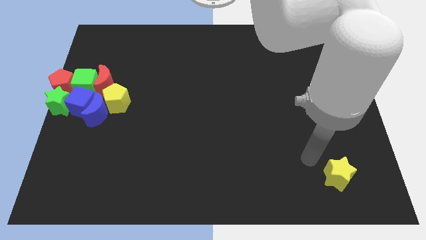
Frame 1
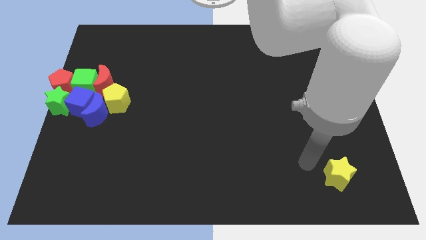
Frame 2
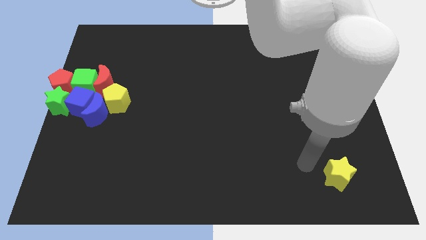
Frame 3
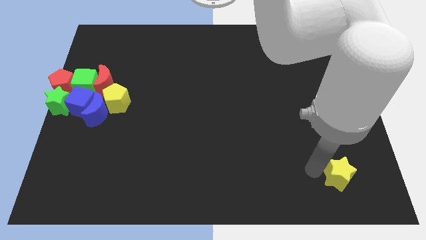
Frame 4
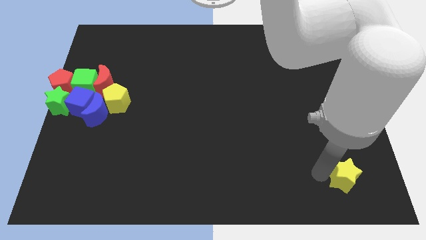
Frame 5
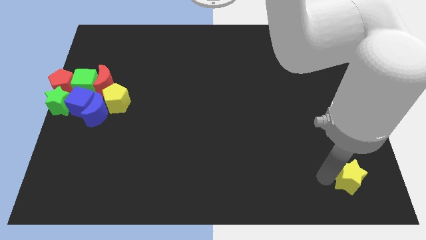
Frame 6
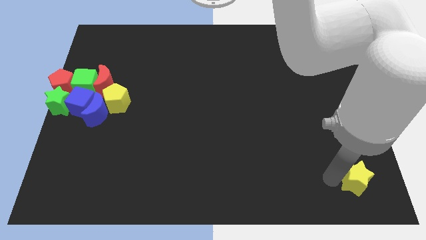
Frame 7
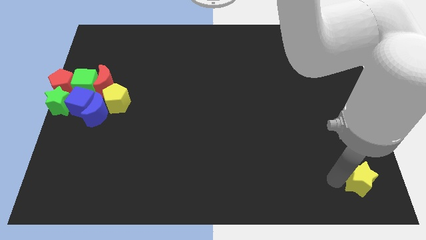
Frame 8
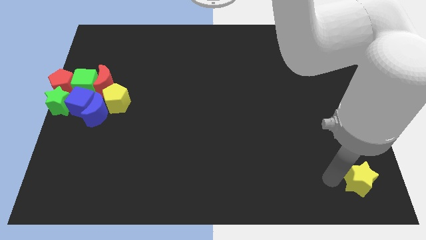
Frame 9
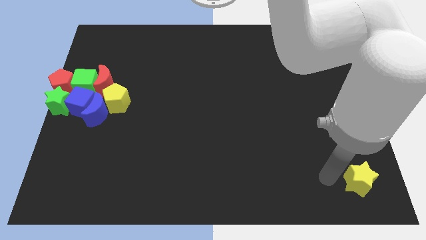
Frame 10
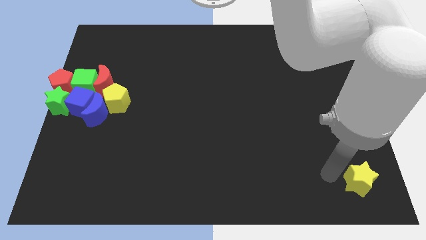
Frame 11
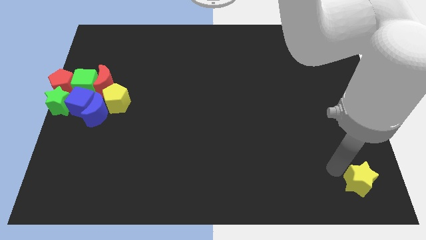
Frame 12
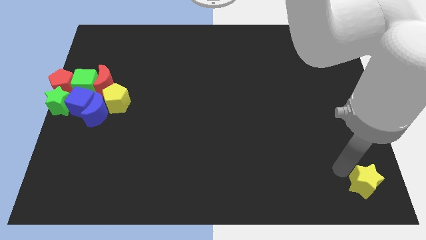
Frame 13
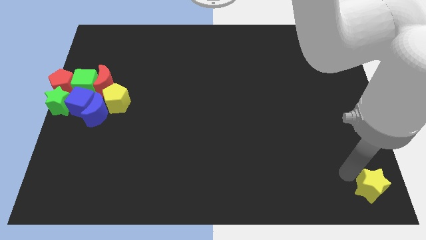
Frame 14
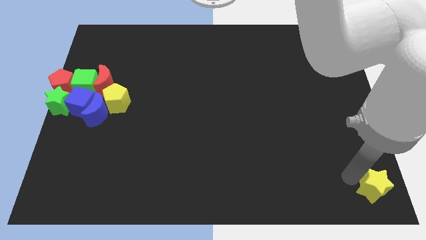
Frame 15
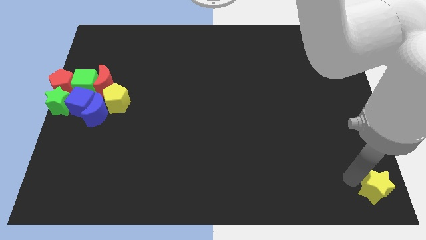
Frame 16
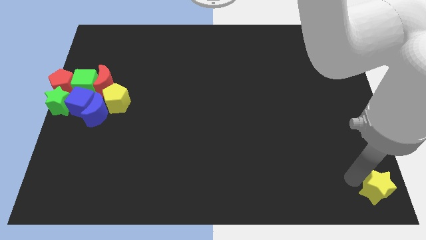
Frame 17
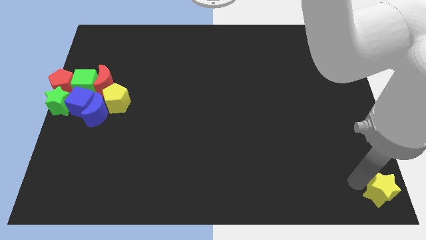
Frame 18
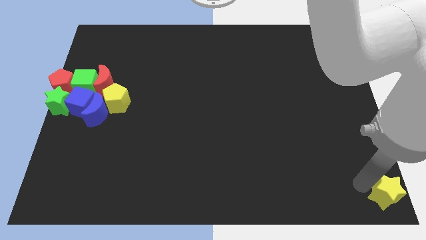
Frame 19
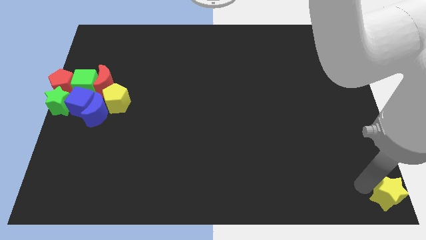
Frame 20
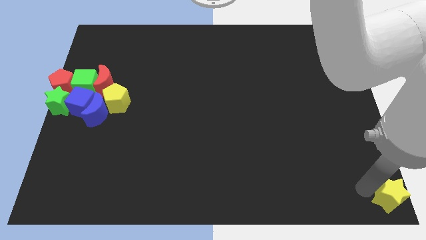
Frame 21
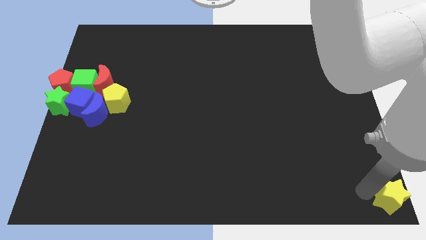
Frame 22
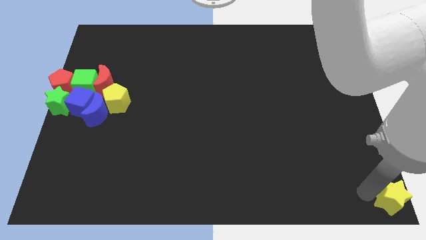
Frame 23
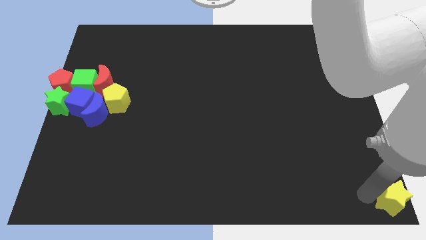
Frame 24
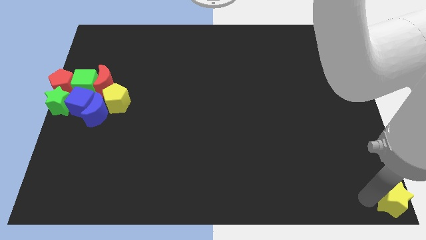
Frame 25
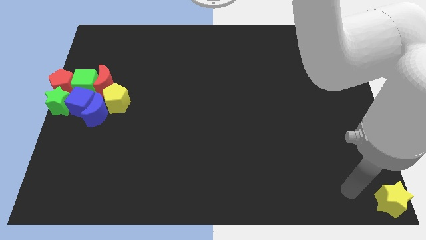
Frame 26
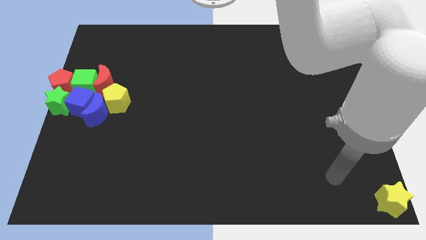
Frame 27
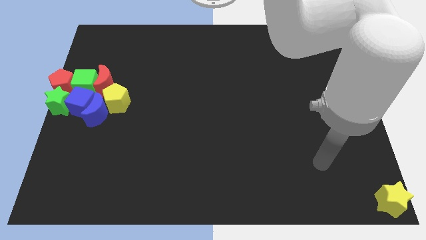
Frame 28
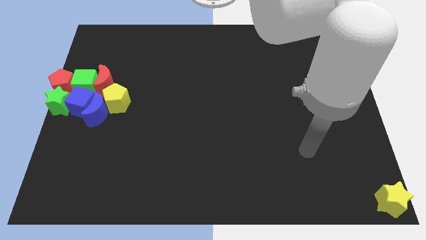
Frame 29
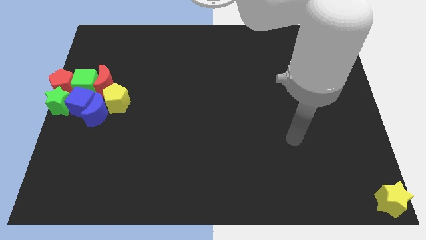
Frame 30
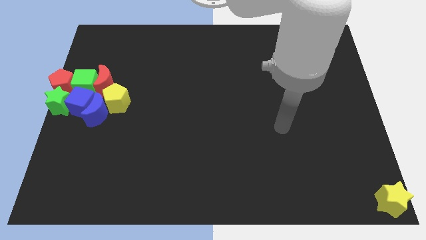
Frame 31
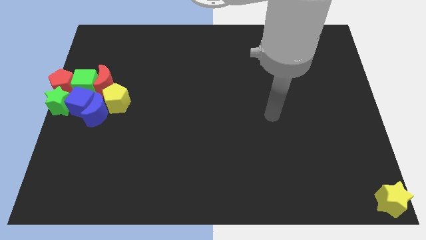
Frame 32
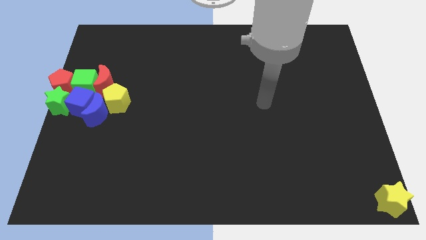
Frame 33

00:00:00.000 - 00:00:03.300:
place the yellow star at the bottom right corner of the board

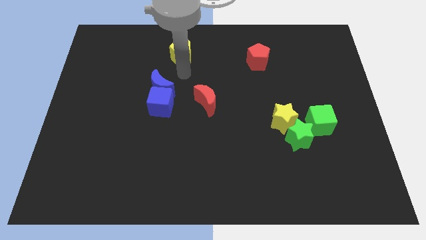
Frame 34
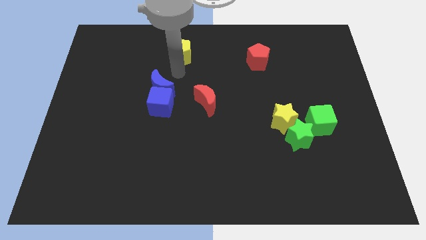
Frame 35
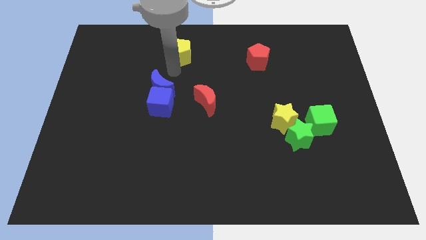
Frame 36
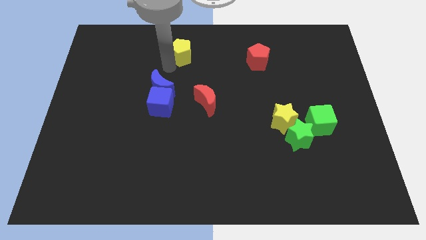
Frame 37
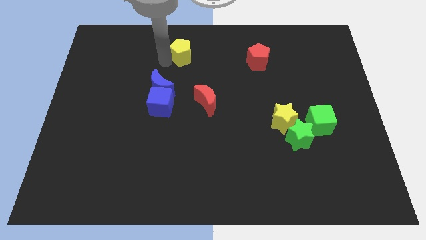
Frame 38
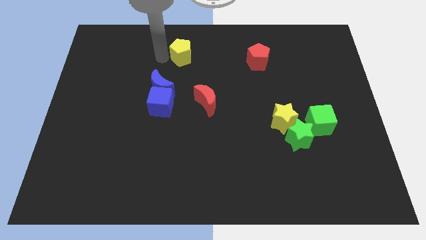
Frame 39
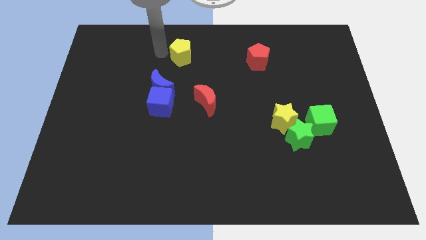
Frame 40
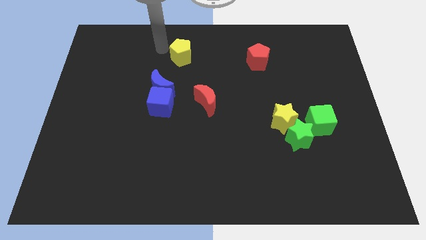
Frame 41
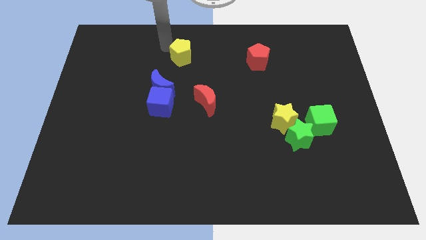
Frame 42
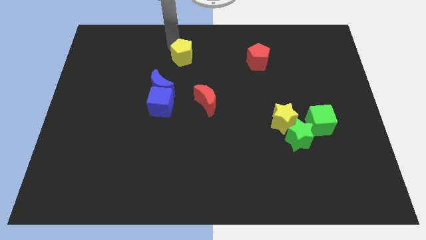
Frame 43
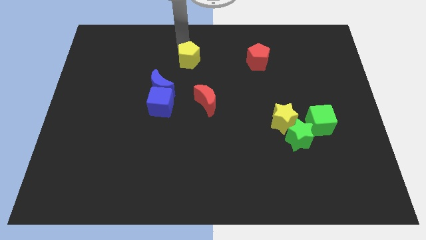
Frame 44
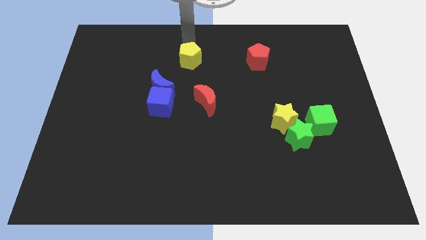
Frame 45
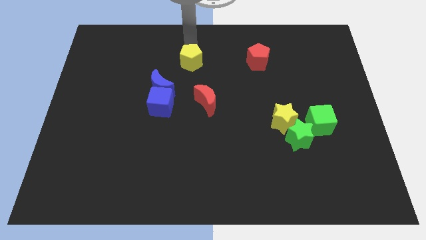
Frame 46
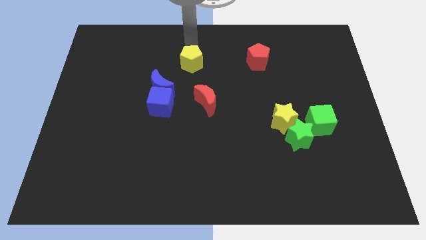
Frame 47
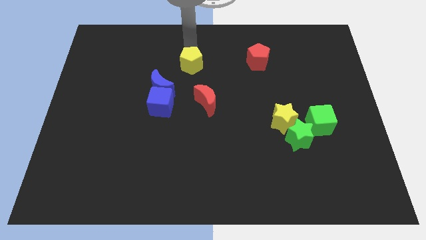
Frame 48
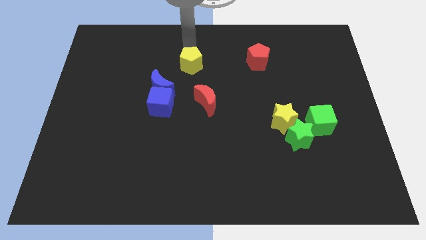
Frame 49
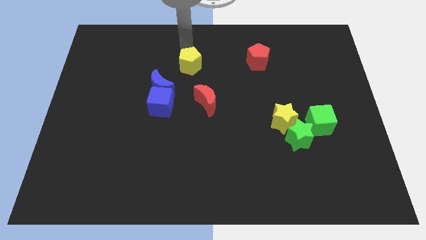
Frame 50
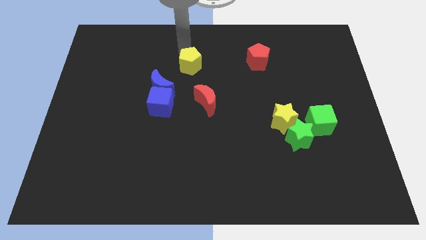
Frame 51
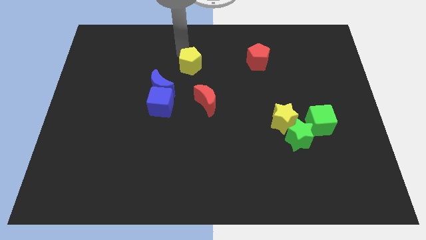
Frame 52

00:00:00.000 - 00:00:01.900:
place the yellow pentagon to the top left side of the red crescent

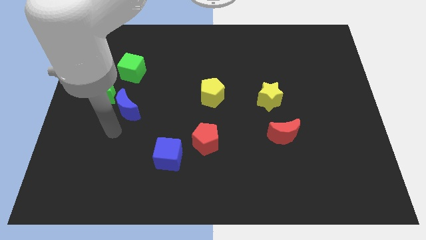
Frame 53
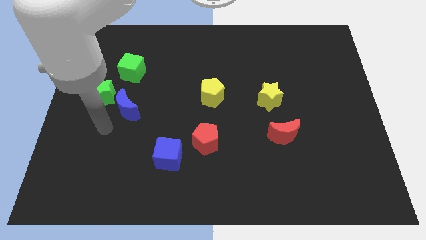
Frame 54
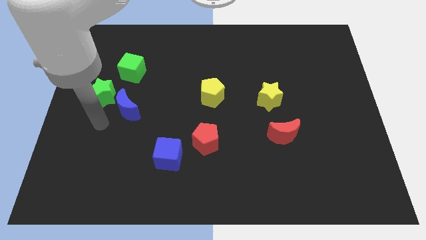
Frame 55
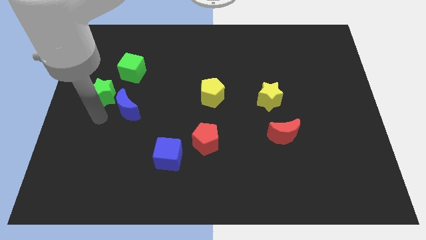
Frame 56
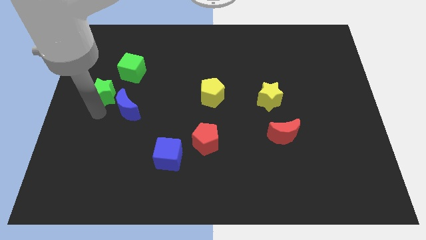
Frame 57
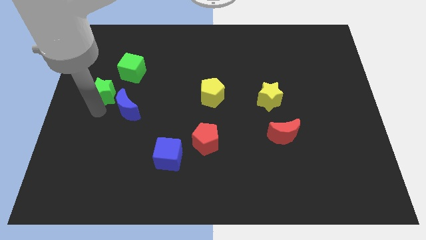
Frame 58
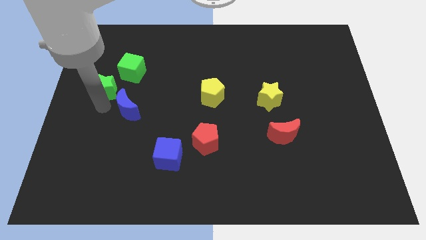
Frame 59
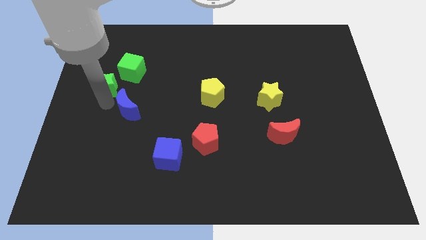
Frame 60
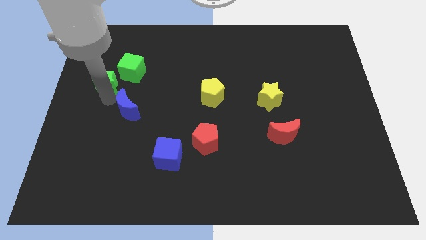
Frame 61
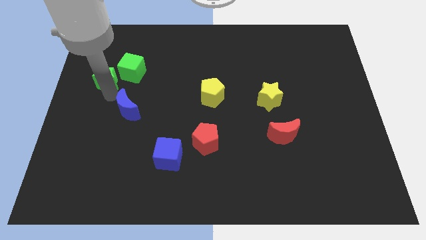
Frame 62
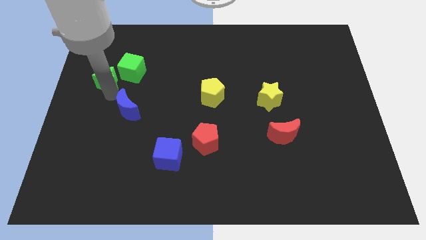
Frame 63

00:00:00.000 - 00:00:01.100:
push the green star slightly towards the left side of the green cube

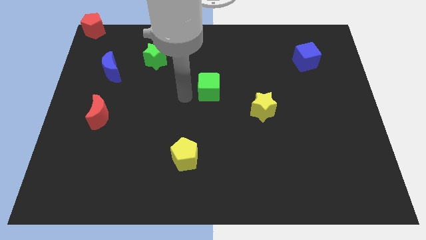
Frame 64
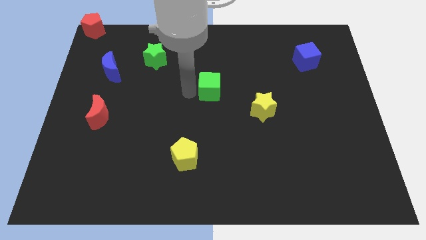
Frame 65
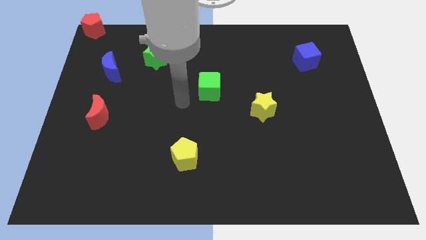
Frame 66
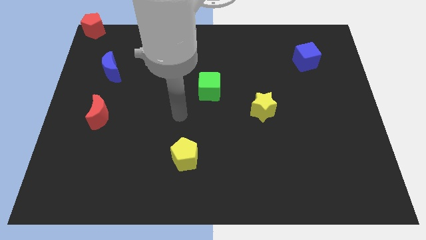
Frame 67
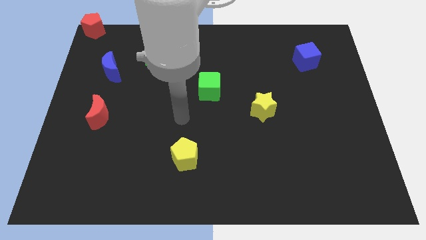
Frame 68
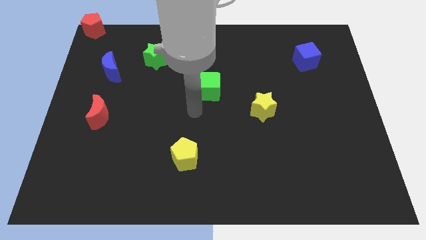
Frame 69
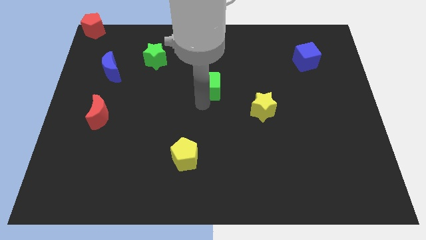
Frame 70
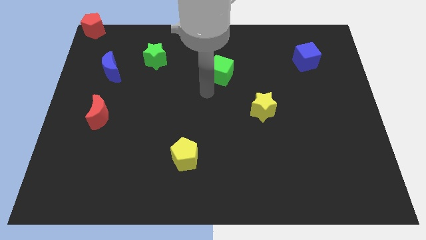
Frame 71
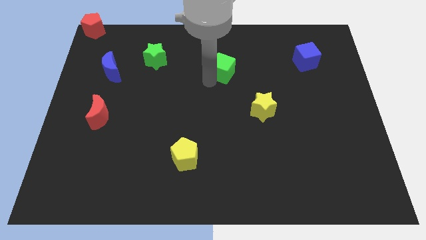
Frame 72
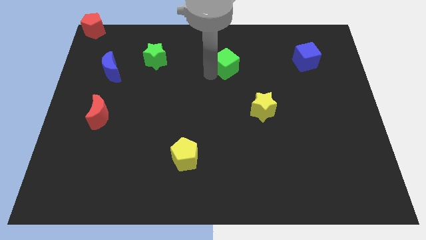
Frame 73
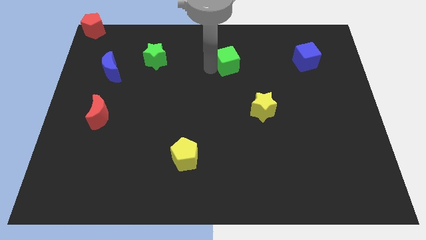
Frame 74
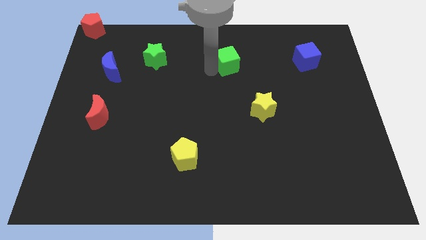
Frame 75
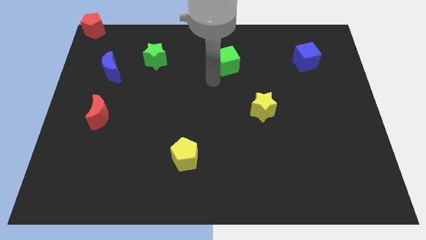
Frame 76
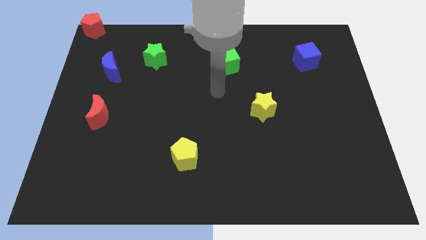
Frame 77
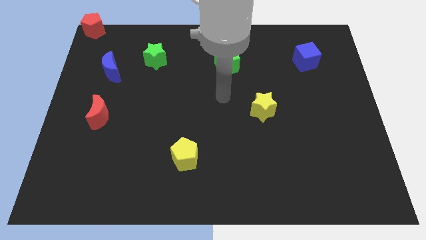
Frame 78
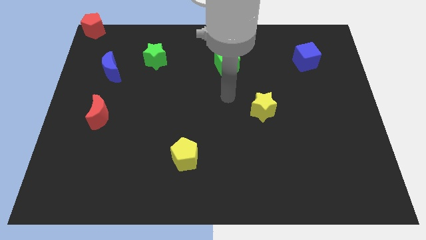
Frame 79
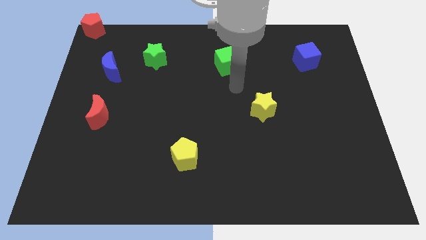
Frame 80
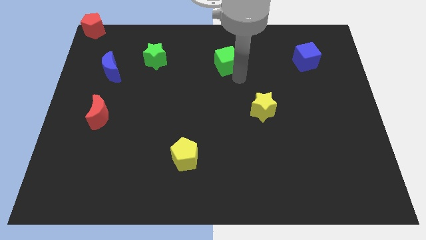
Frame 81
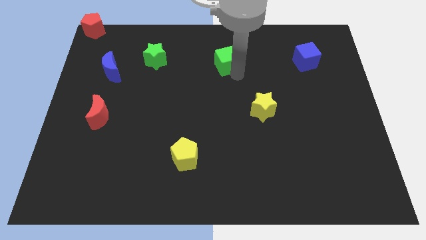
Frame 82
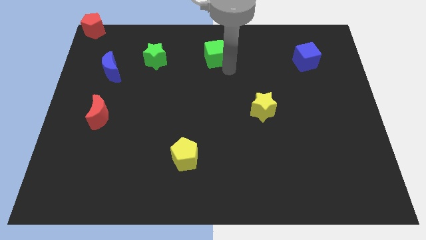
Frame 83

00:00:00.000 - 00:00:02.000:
place the green cube in between the green star and the blue cube

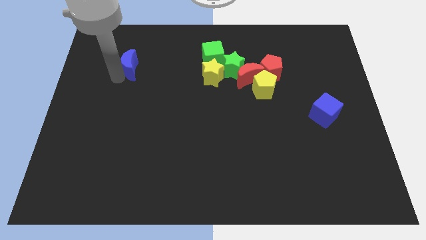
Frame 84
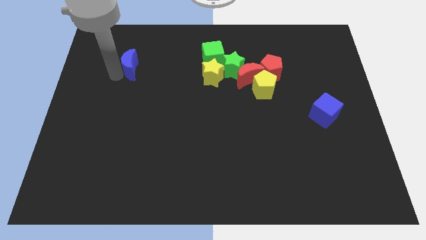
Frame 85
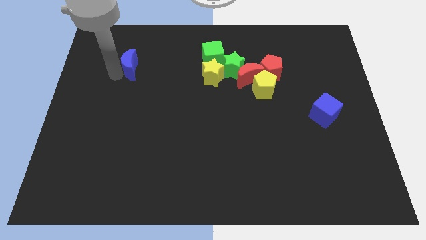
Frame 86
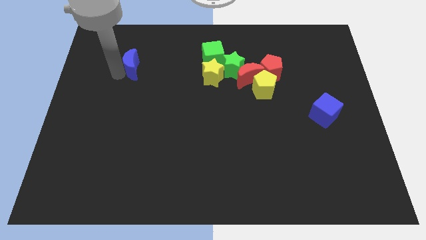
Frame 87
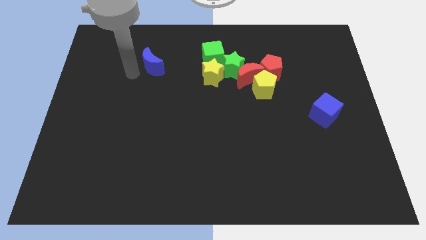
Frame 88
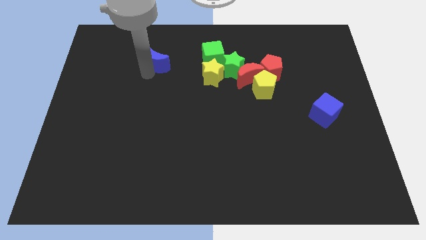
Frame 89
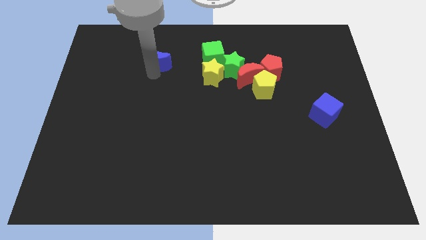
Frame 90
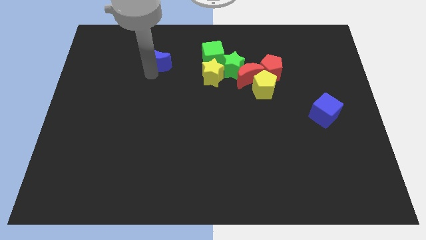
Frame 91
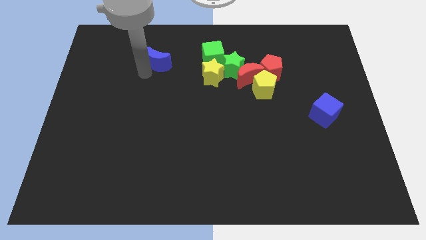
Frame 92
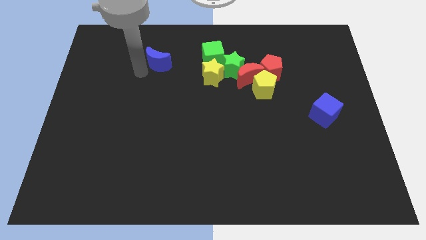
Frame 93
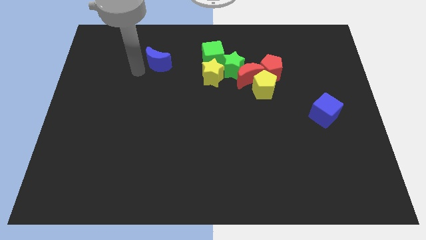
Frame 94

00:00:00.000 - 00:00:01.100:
move blue moon towards green cube
